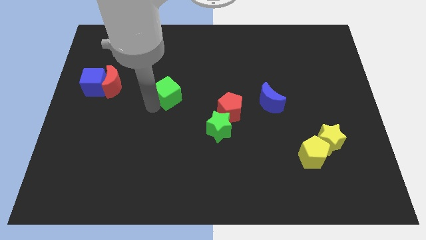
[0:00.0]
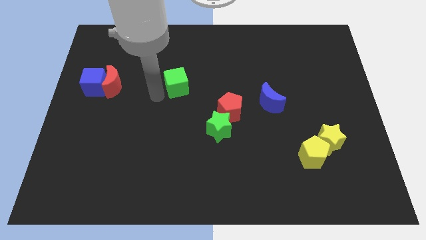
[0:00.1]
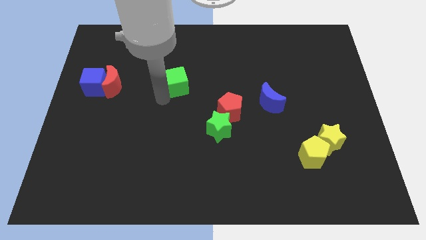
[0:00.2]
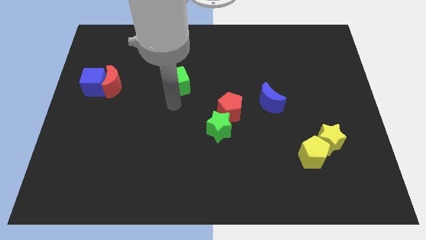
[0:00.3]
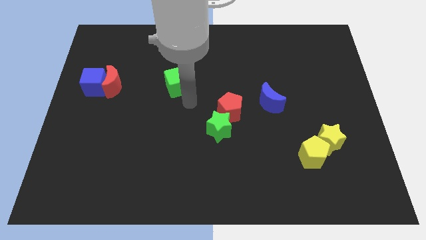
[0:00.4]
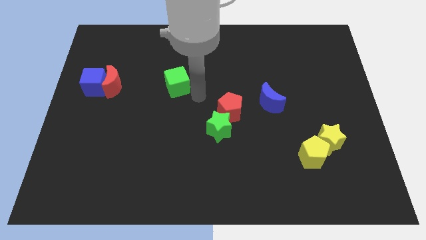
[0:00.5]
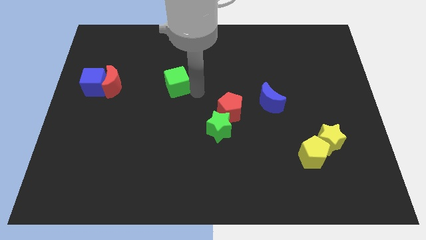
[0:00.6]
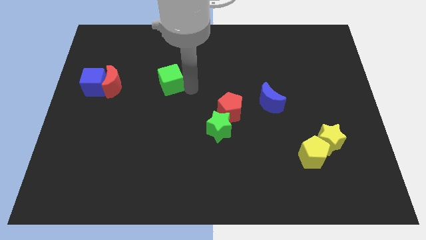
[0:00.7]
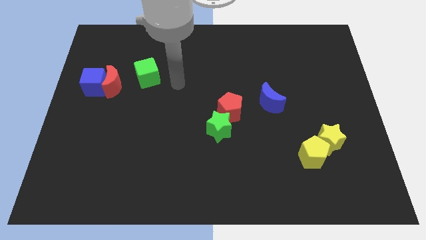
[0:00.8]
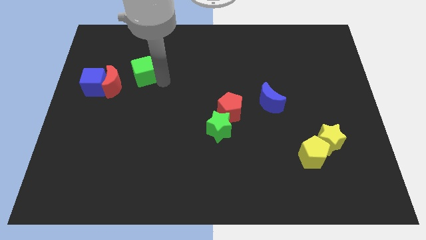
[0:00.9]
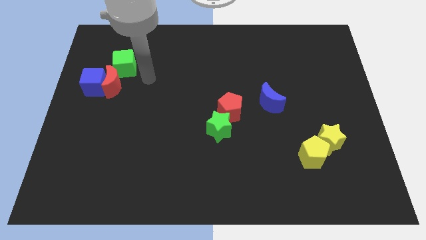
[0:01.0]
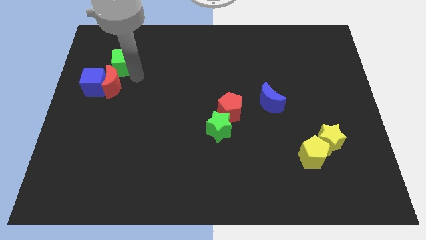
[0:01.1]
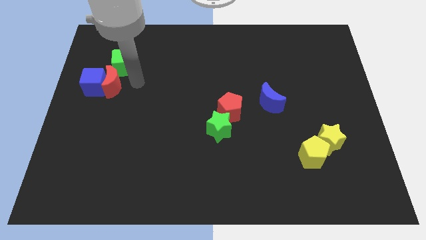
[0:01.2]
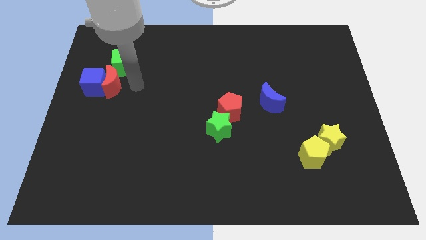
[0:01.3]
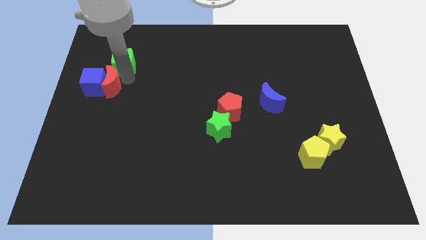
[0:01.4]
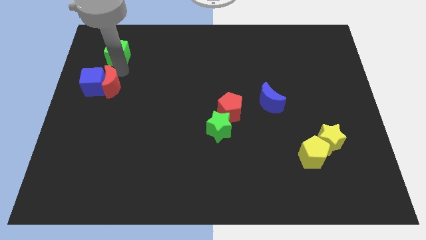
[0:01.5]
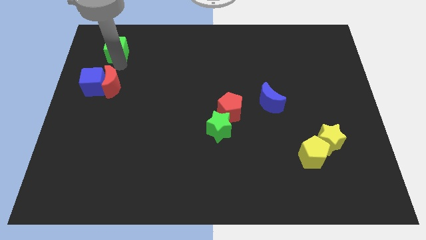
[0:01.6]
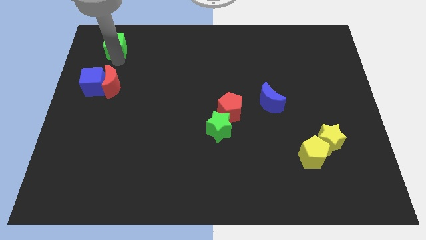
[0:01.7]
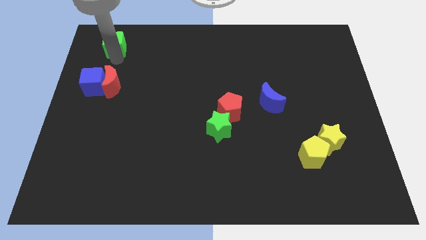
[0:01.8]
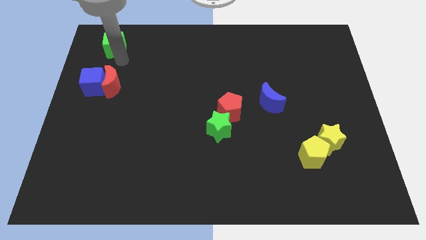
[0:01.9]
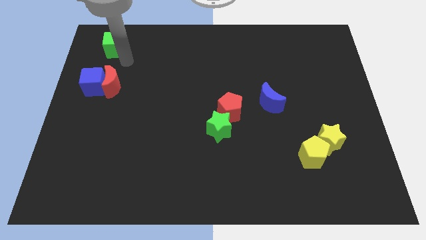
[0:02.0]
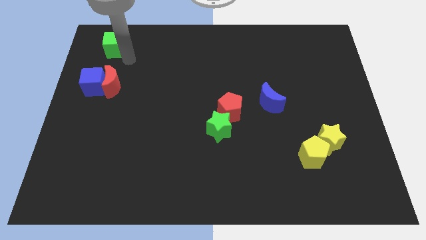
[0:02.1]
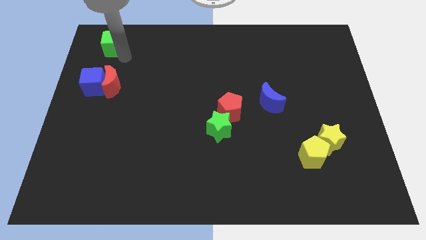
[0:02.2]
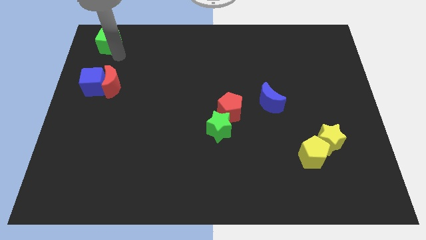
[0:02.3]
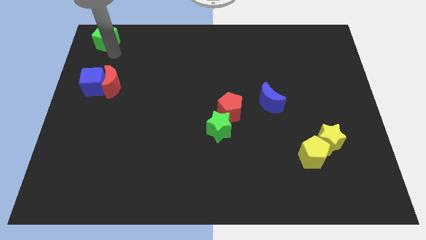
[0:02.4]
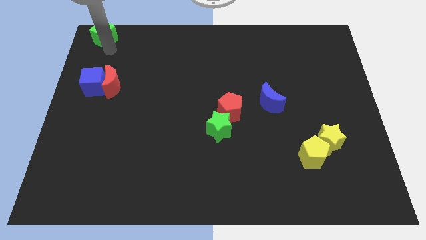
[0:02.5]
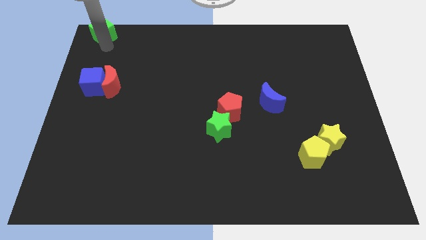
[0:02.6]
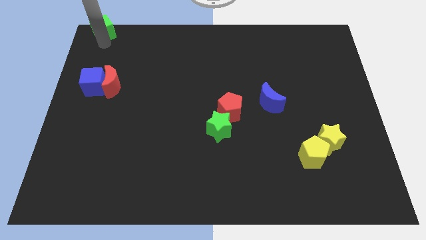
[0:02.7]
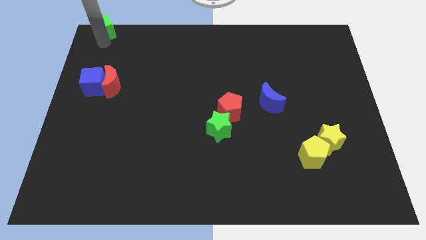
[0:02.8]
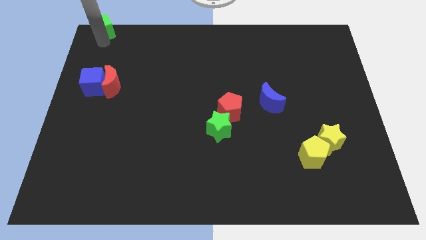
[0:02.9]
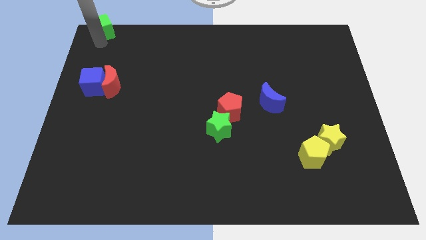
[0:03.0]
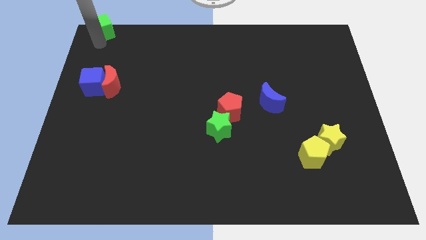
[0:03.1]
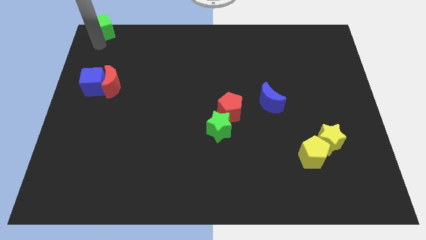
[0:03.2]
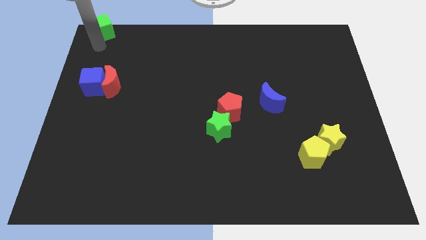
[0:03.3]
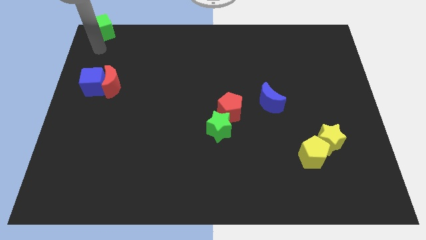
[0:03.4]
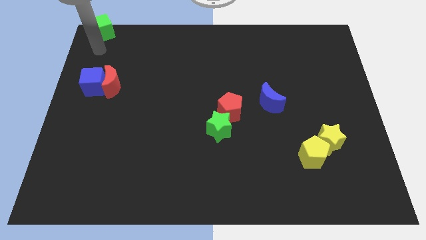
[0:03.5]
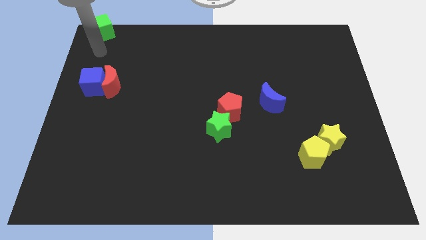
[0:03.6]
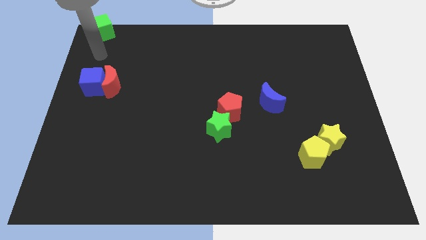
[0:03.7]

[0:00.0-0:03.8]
push the green cube towards the top left corner of the board

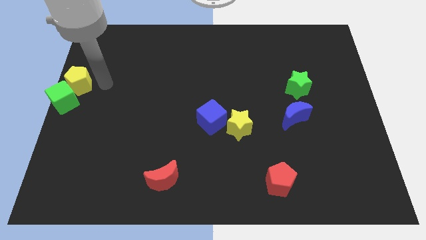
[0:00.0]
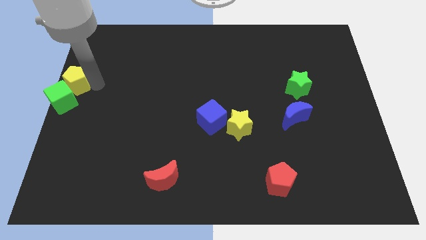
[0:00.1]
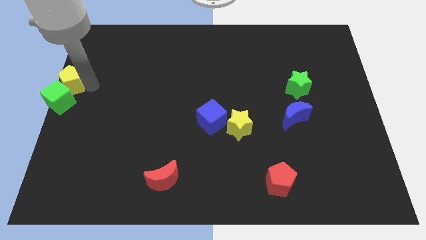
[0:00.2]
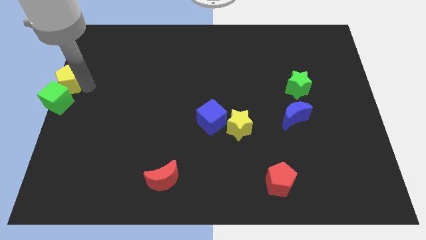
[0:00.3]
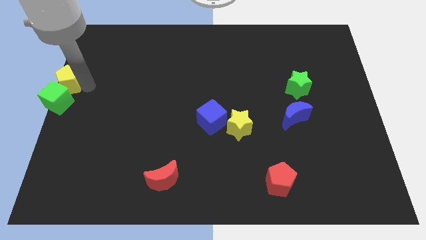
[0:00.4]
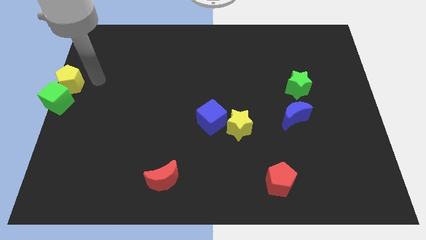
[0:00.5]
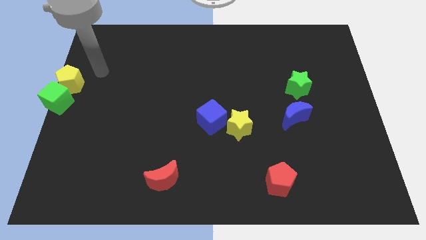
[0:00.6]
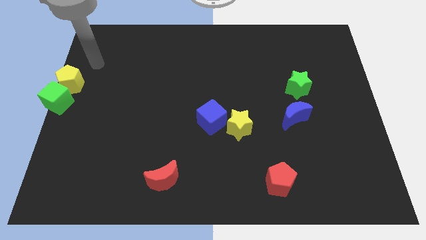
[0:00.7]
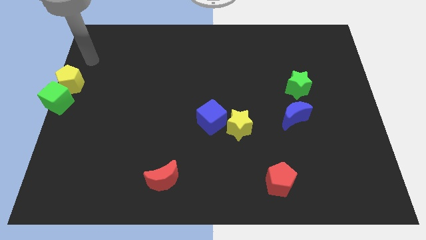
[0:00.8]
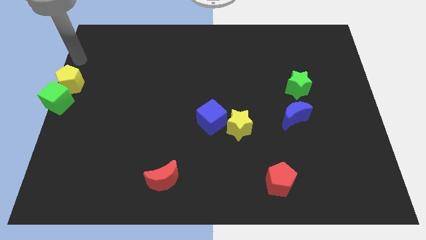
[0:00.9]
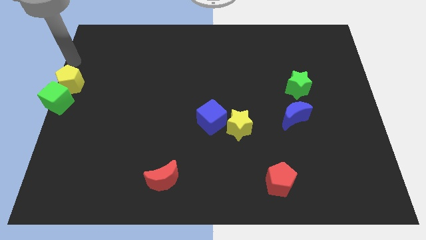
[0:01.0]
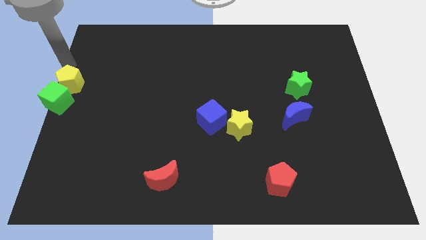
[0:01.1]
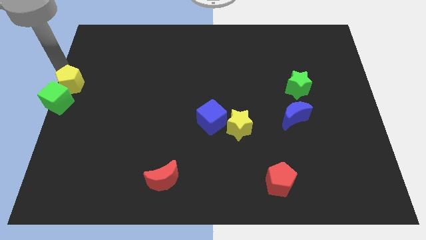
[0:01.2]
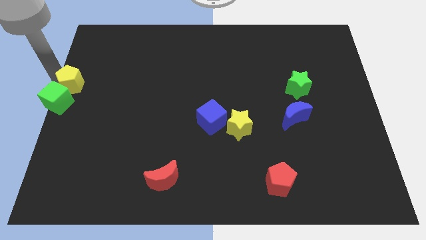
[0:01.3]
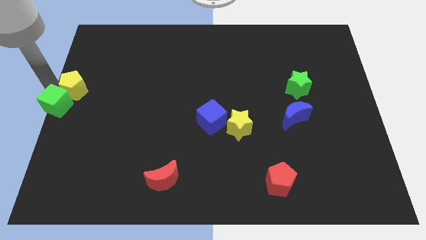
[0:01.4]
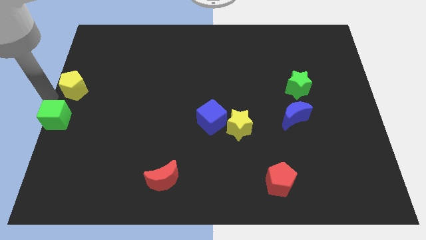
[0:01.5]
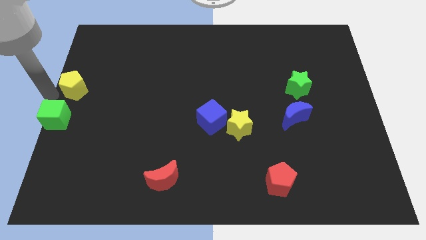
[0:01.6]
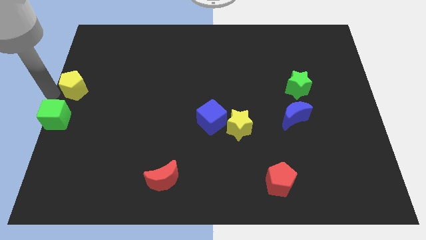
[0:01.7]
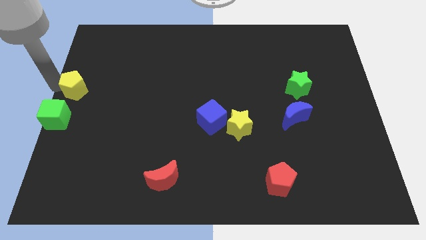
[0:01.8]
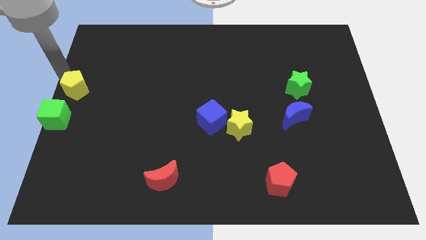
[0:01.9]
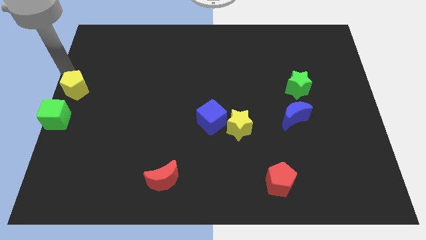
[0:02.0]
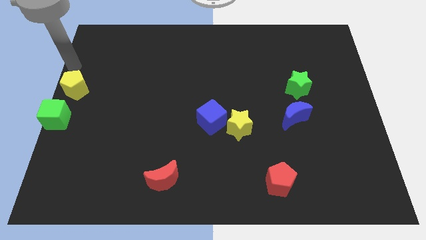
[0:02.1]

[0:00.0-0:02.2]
slightly move the green cube towards the left cenetr of the board

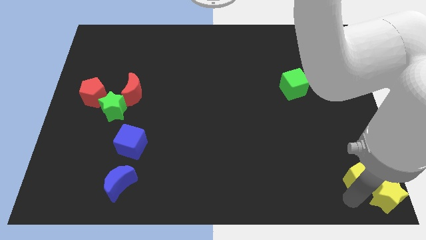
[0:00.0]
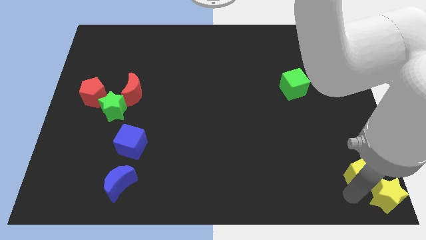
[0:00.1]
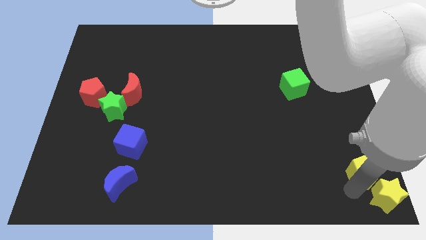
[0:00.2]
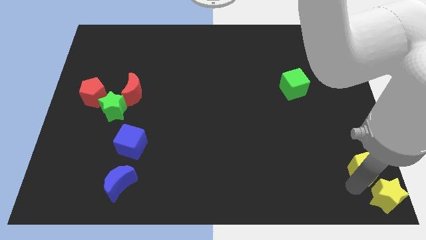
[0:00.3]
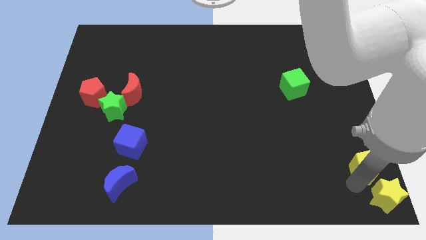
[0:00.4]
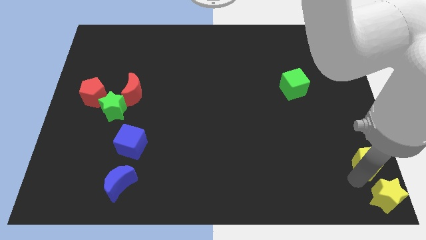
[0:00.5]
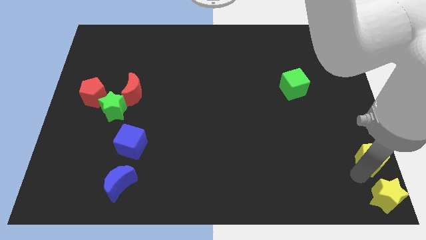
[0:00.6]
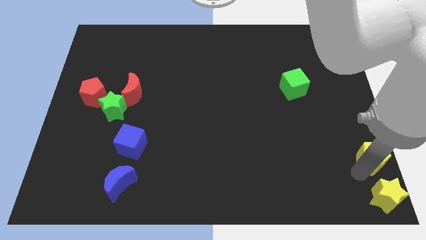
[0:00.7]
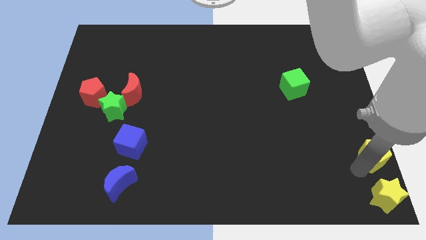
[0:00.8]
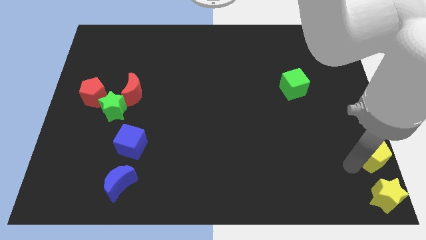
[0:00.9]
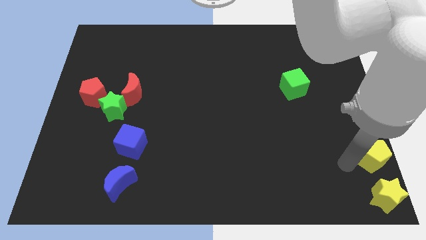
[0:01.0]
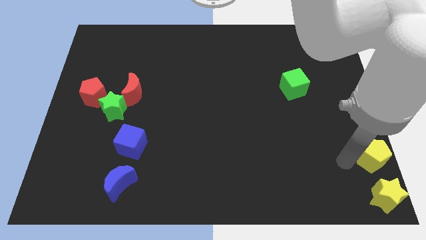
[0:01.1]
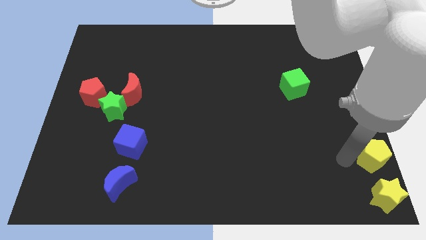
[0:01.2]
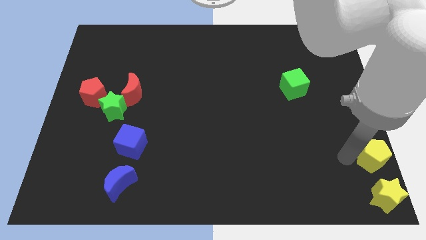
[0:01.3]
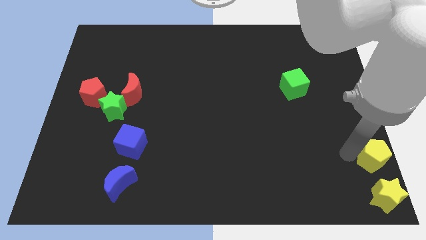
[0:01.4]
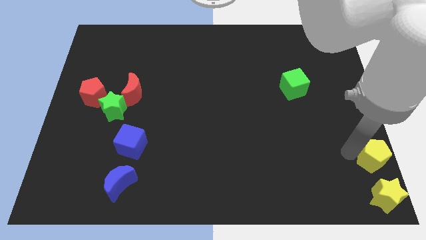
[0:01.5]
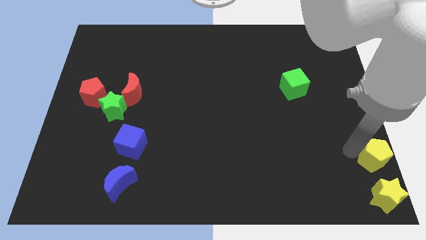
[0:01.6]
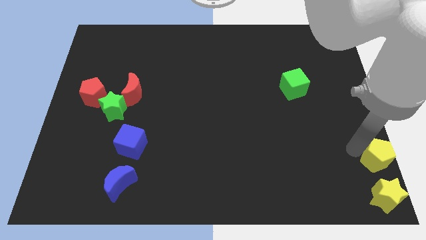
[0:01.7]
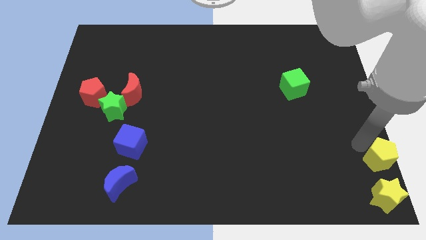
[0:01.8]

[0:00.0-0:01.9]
place the yellow pentagon vertically above the yellow star

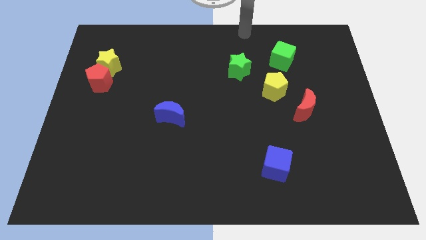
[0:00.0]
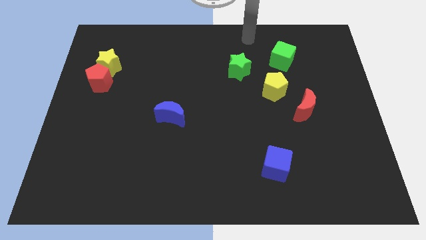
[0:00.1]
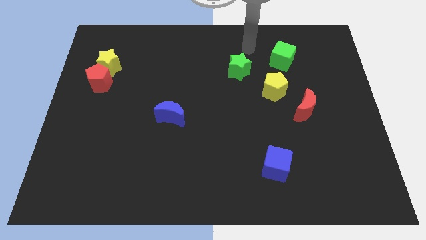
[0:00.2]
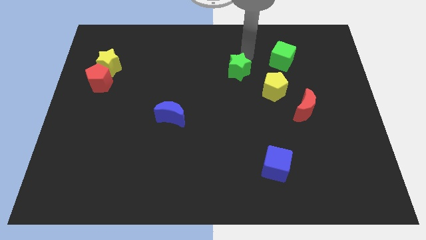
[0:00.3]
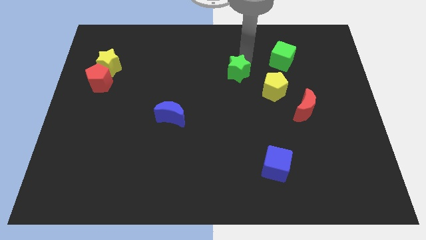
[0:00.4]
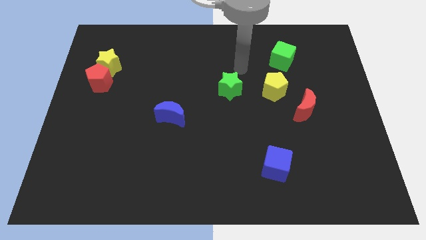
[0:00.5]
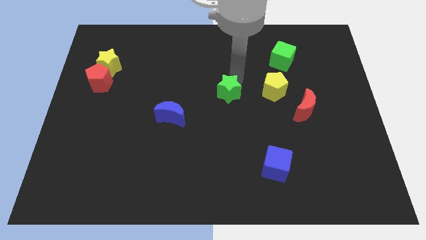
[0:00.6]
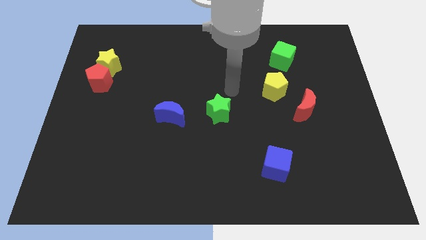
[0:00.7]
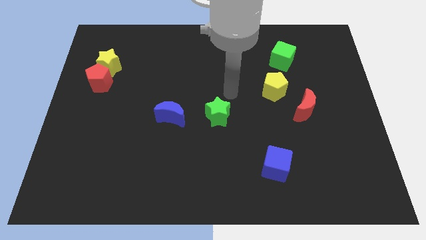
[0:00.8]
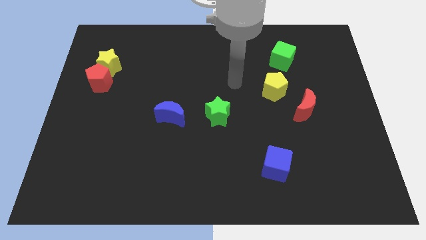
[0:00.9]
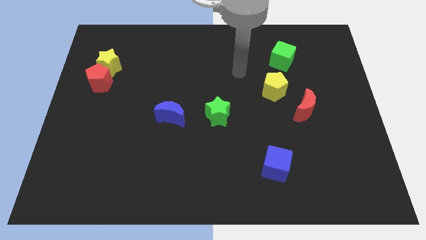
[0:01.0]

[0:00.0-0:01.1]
place green star parallel to the right side of blue moon
